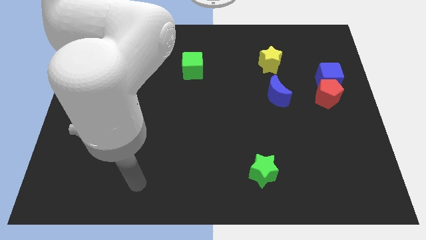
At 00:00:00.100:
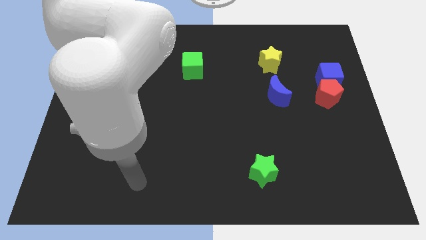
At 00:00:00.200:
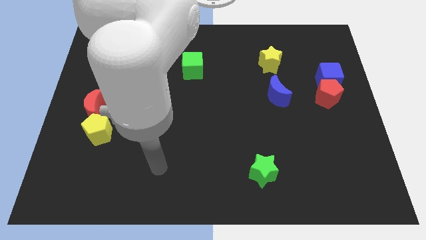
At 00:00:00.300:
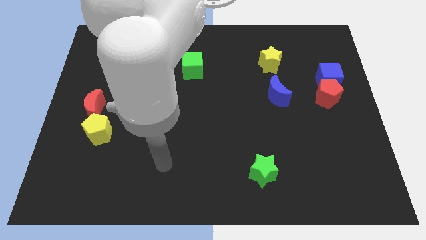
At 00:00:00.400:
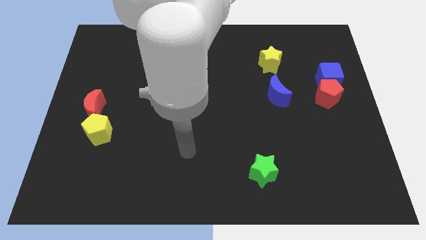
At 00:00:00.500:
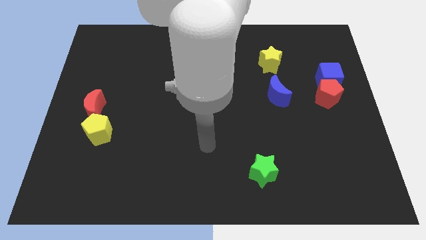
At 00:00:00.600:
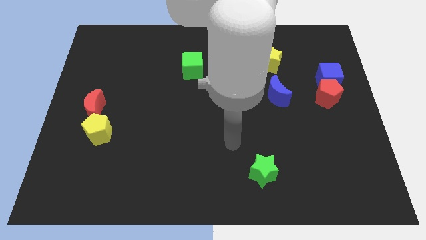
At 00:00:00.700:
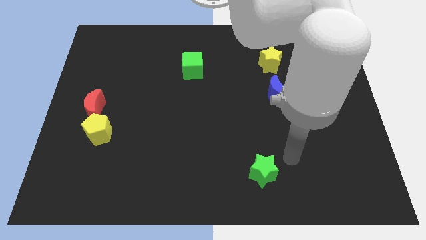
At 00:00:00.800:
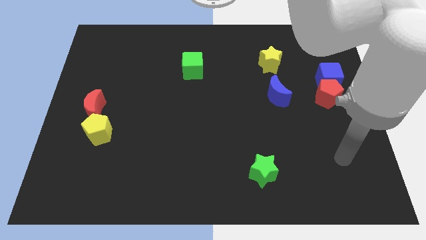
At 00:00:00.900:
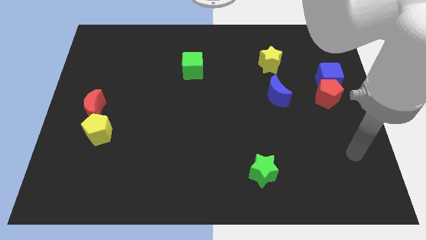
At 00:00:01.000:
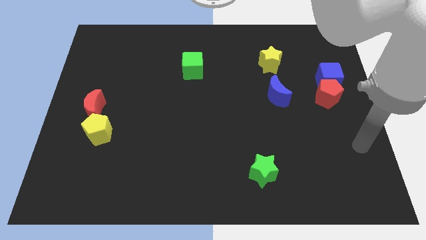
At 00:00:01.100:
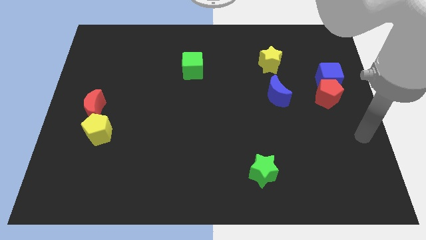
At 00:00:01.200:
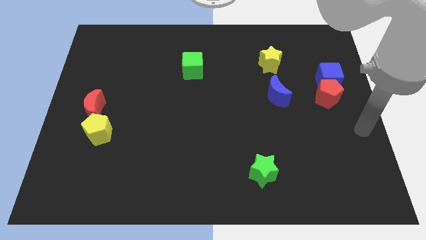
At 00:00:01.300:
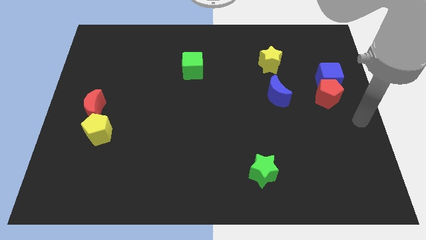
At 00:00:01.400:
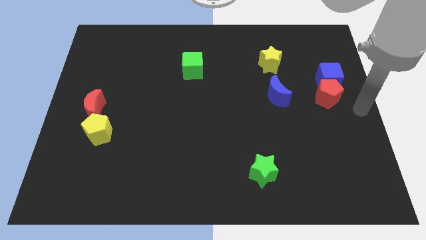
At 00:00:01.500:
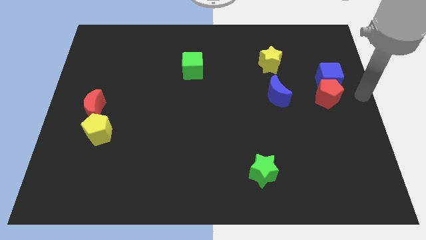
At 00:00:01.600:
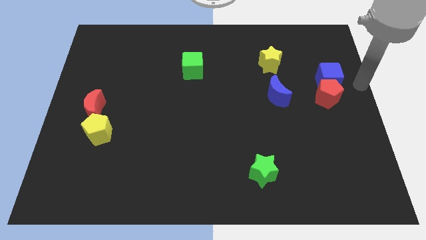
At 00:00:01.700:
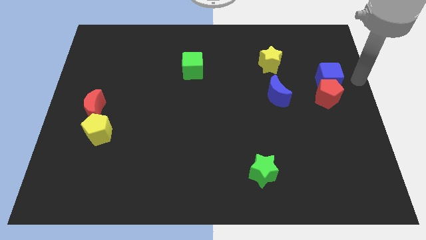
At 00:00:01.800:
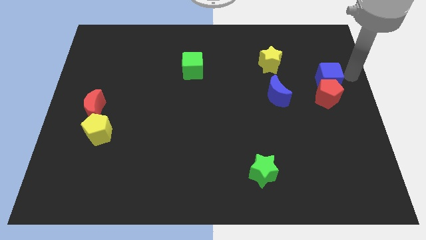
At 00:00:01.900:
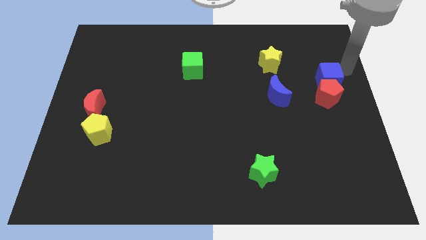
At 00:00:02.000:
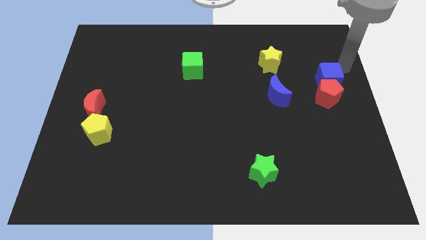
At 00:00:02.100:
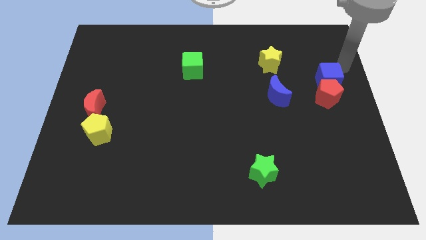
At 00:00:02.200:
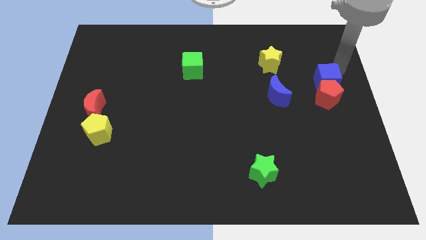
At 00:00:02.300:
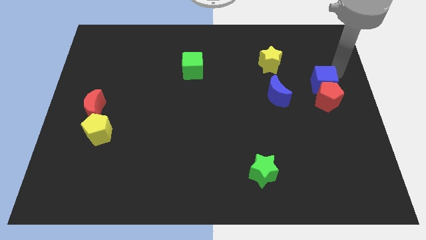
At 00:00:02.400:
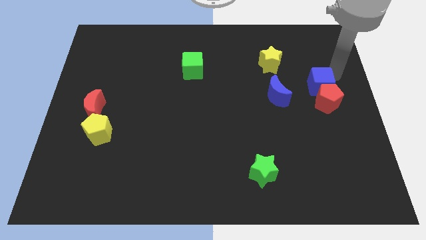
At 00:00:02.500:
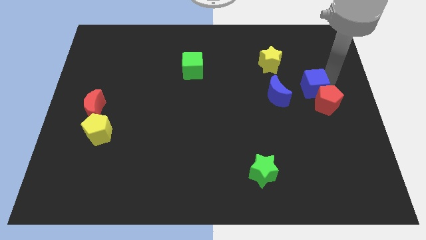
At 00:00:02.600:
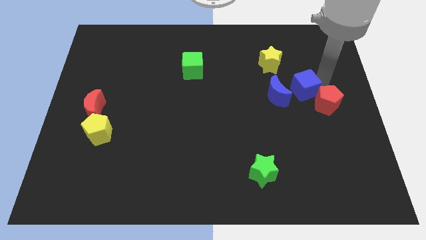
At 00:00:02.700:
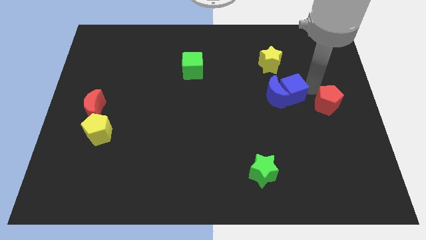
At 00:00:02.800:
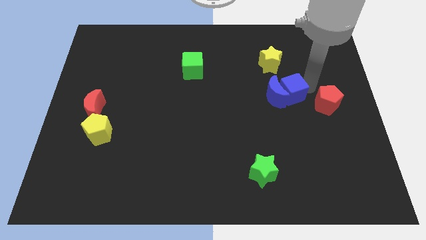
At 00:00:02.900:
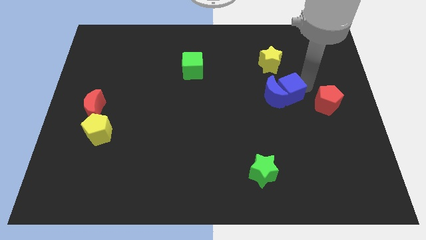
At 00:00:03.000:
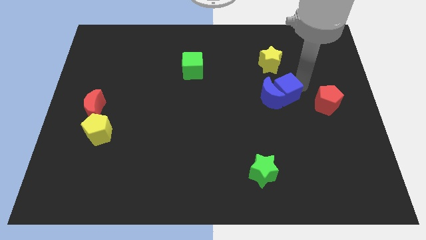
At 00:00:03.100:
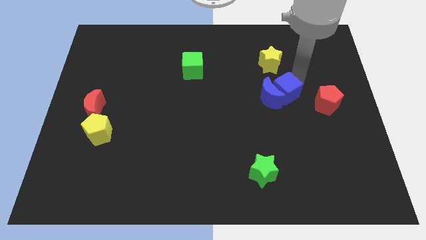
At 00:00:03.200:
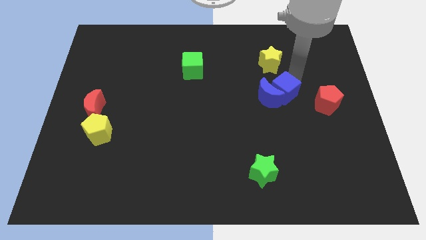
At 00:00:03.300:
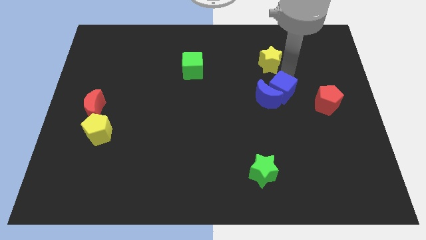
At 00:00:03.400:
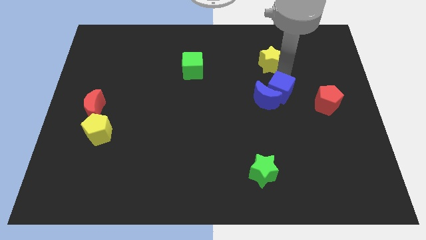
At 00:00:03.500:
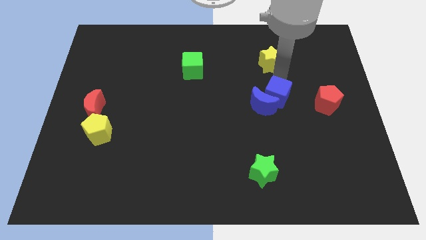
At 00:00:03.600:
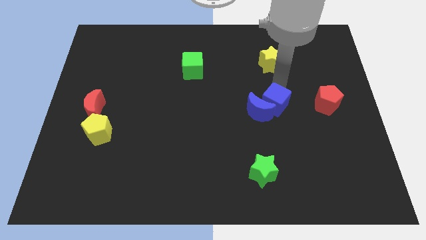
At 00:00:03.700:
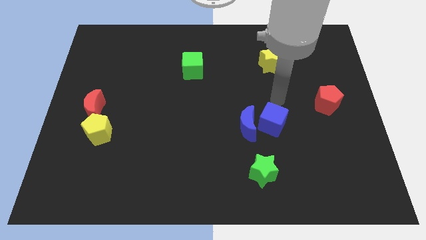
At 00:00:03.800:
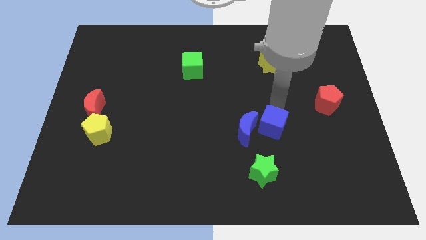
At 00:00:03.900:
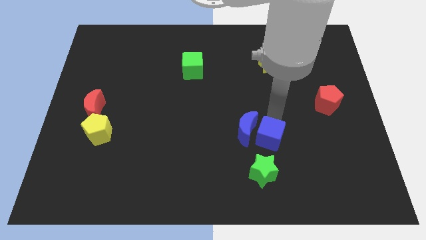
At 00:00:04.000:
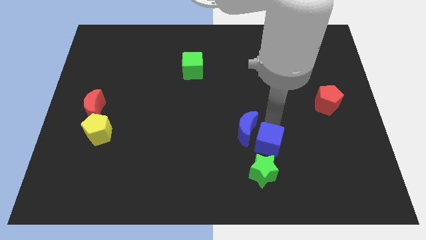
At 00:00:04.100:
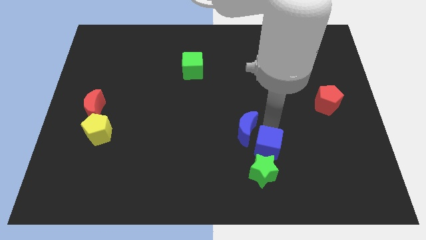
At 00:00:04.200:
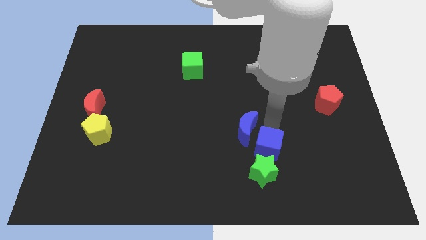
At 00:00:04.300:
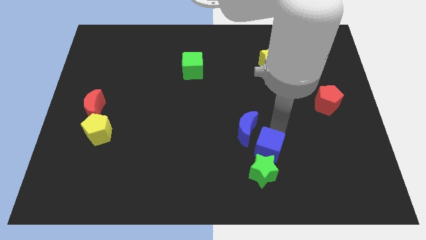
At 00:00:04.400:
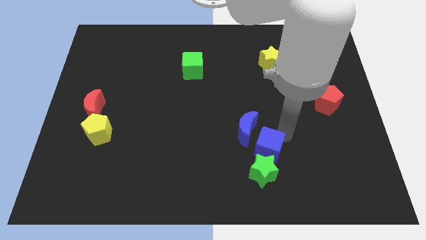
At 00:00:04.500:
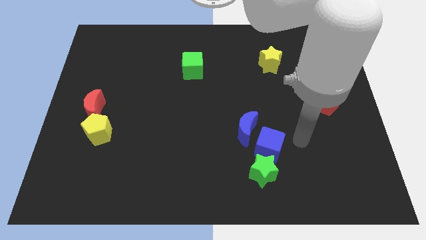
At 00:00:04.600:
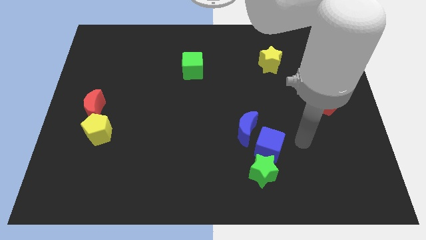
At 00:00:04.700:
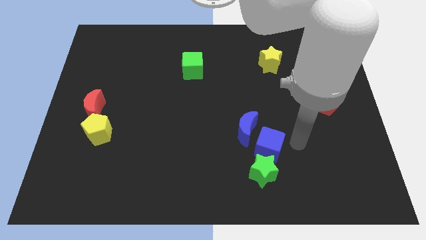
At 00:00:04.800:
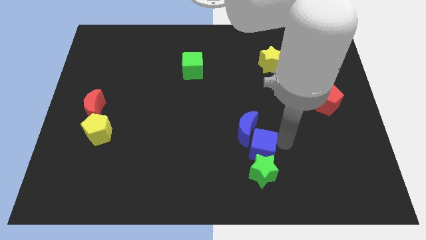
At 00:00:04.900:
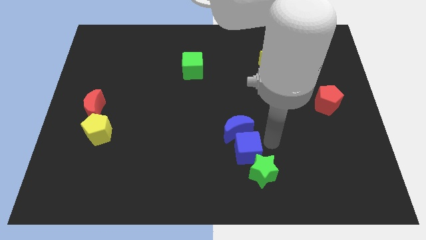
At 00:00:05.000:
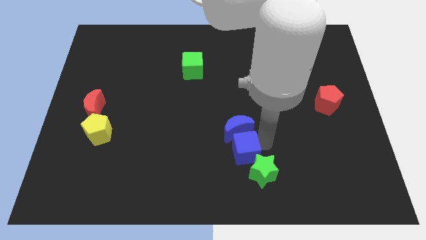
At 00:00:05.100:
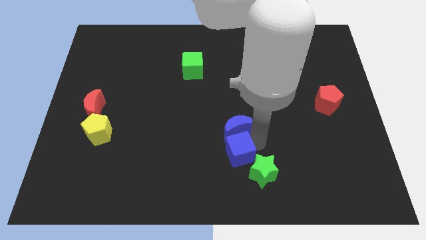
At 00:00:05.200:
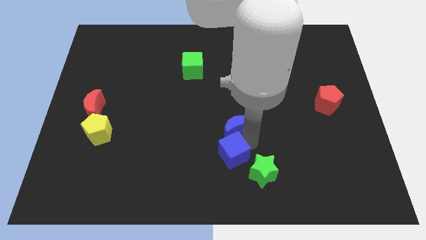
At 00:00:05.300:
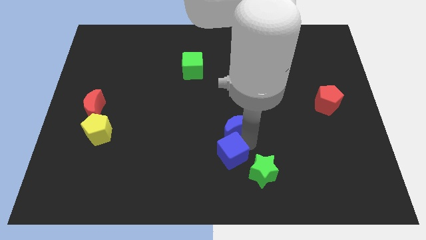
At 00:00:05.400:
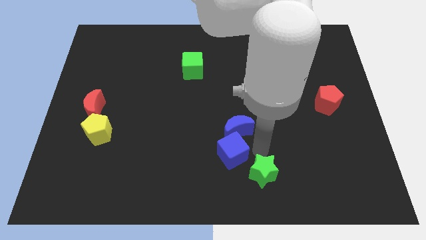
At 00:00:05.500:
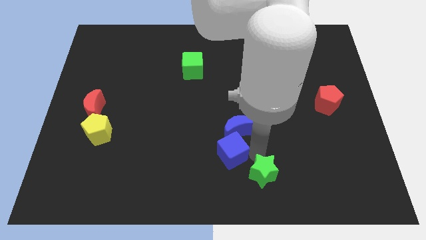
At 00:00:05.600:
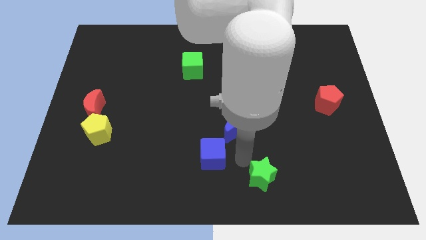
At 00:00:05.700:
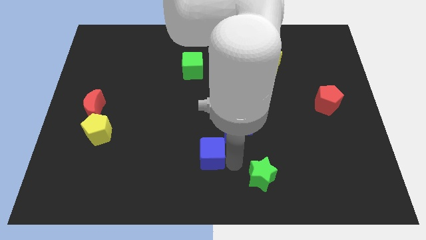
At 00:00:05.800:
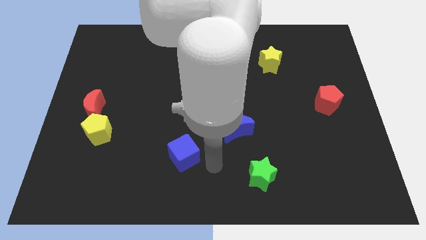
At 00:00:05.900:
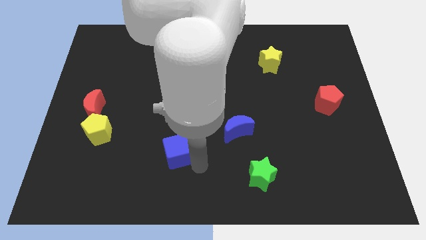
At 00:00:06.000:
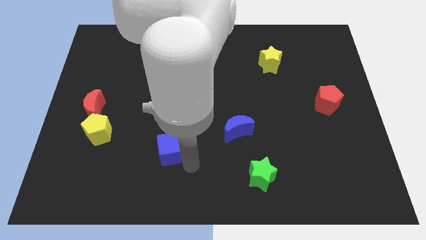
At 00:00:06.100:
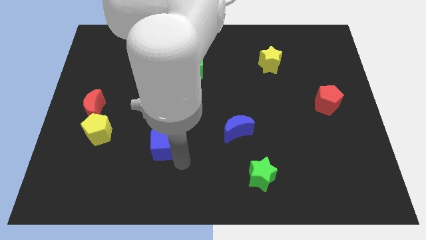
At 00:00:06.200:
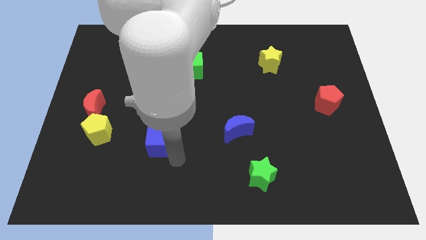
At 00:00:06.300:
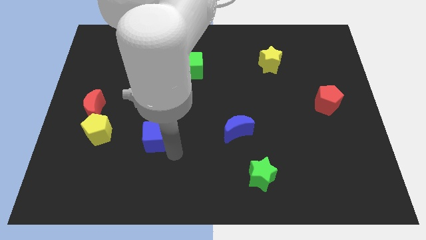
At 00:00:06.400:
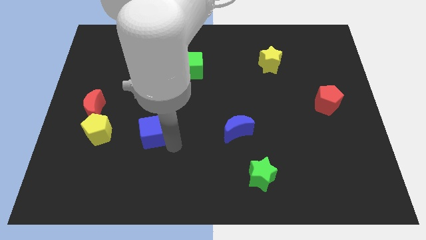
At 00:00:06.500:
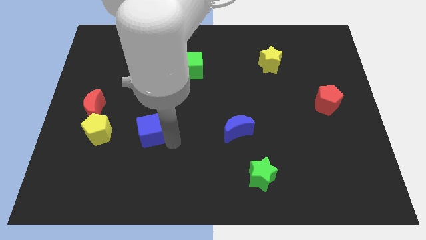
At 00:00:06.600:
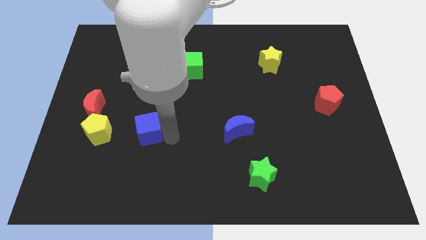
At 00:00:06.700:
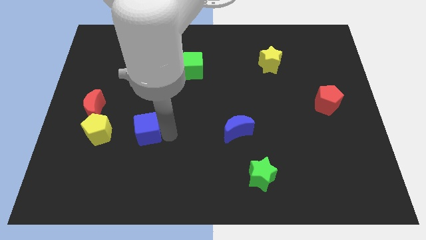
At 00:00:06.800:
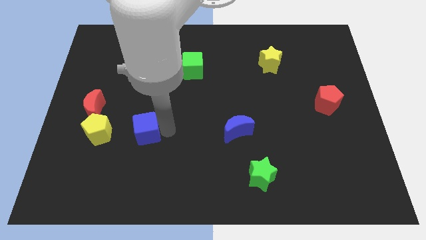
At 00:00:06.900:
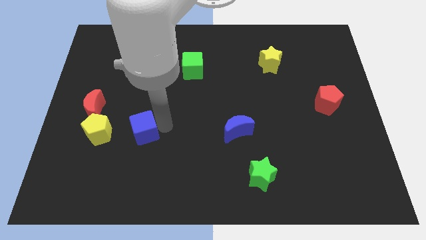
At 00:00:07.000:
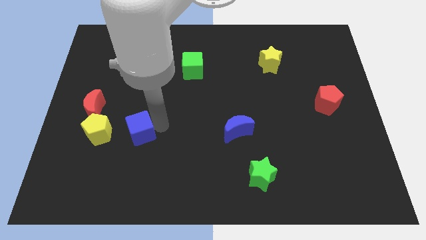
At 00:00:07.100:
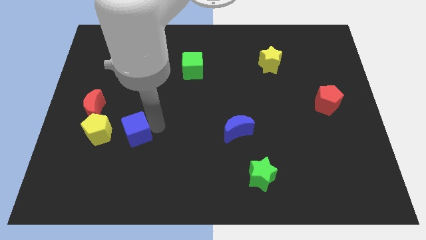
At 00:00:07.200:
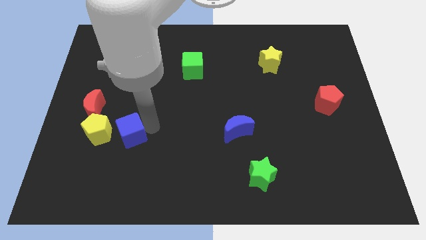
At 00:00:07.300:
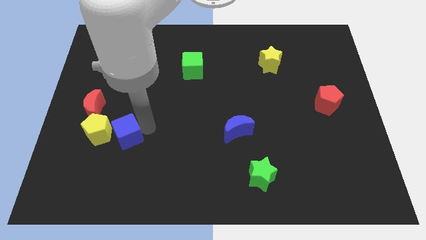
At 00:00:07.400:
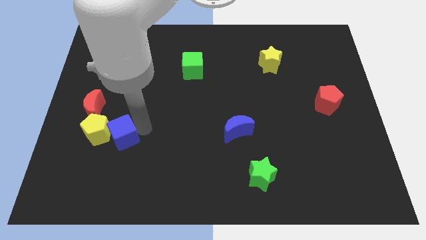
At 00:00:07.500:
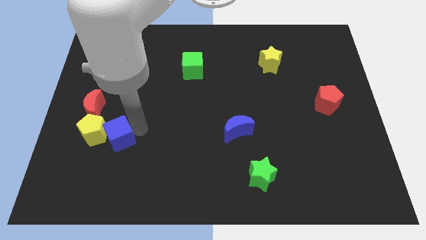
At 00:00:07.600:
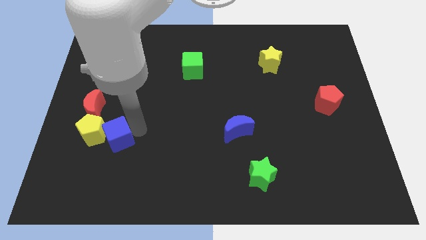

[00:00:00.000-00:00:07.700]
put the blue cube to the yellow pentagon

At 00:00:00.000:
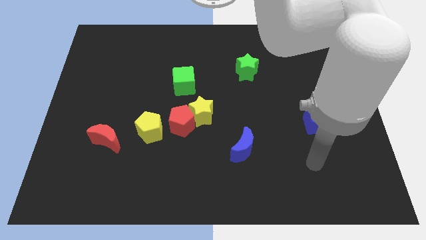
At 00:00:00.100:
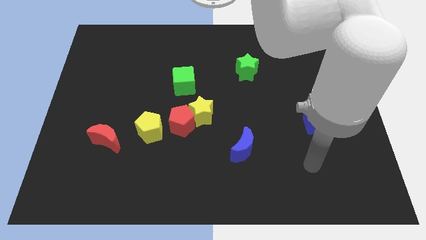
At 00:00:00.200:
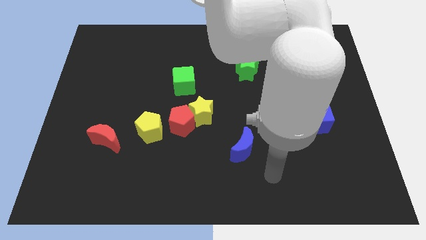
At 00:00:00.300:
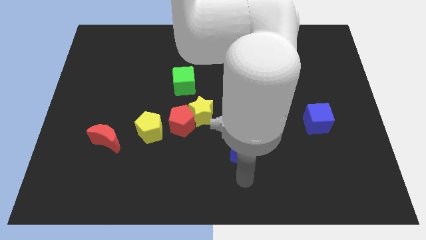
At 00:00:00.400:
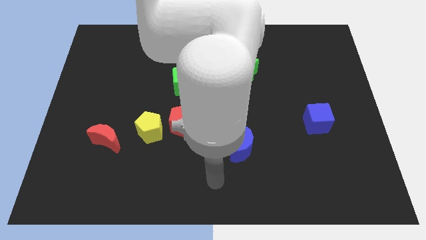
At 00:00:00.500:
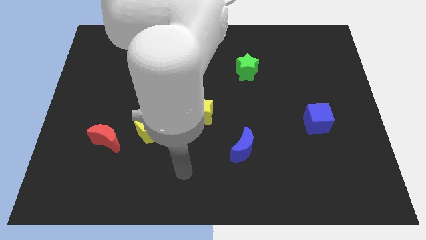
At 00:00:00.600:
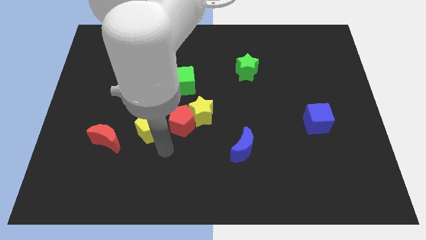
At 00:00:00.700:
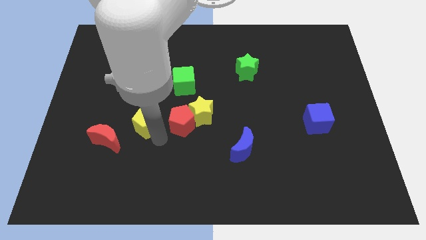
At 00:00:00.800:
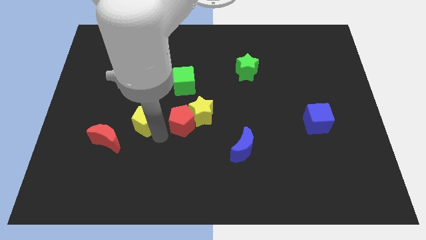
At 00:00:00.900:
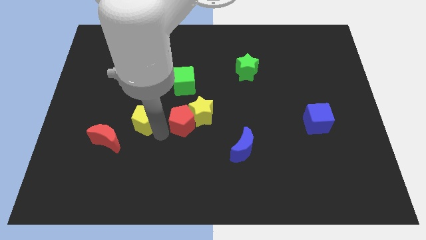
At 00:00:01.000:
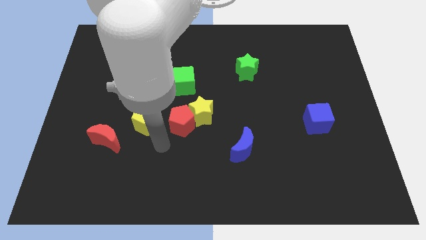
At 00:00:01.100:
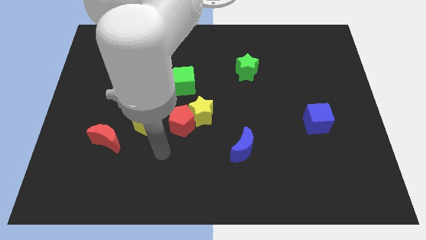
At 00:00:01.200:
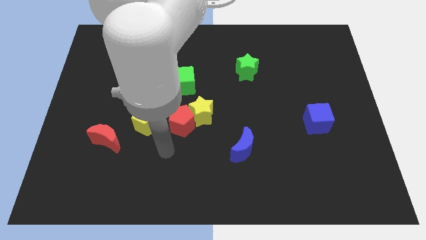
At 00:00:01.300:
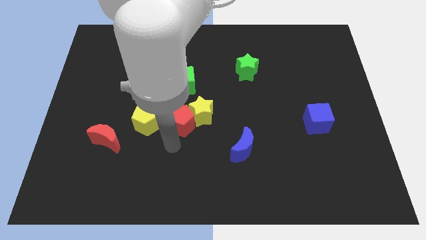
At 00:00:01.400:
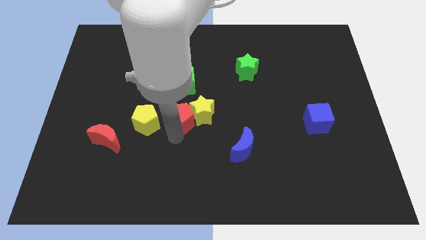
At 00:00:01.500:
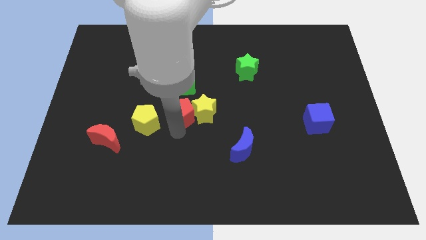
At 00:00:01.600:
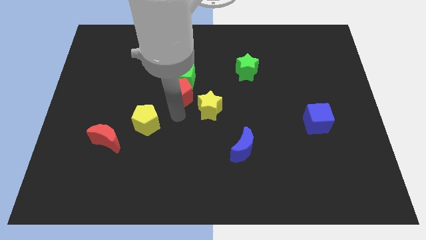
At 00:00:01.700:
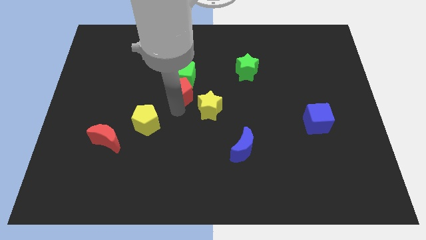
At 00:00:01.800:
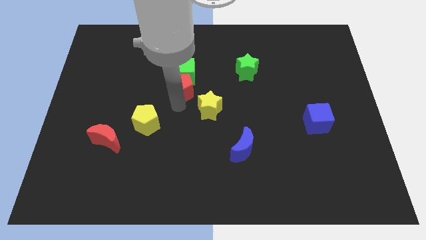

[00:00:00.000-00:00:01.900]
put the red pentagon towards the green cube
